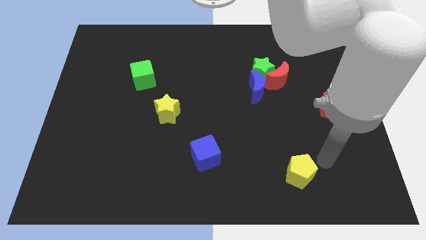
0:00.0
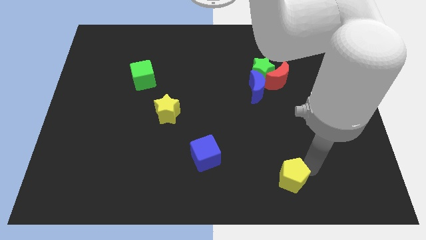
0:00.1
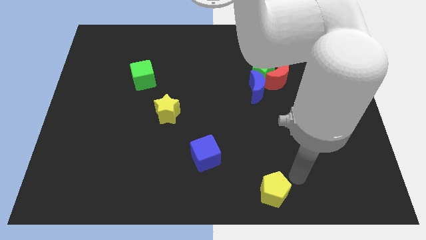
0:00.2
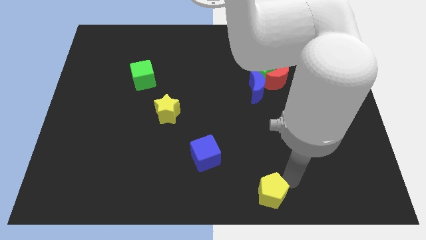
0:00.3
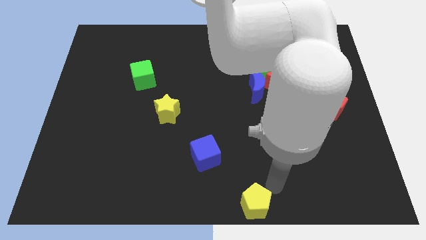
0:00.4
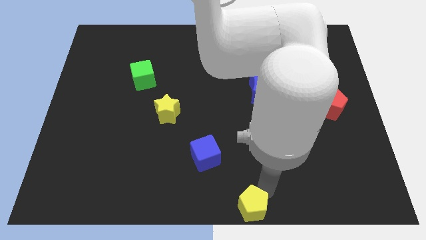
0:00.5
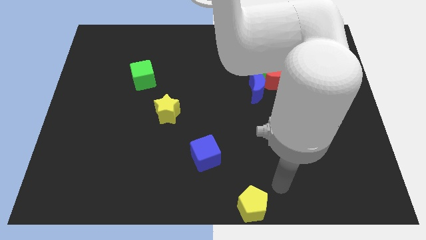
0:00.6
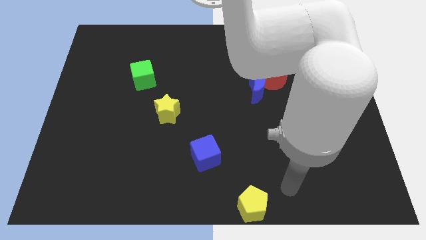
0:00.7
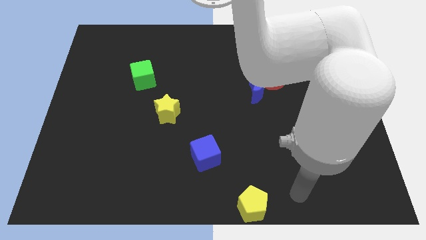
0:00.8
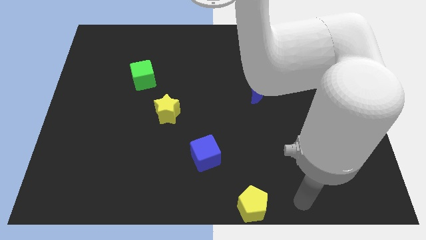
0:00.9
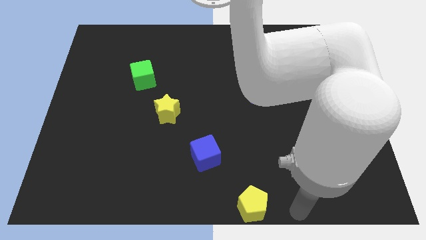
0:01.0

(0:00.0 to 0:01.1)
place the yellow pentagon towards the bottom right side of the blue cube

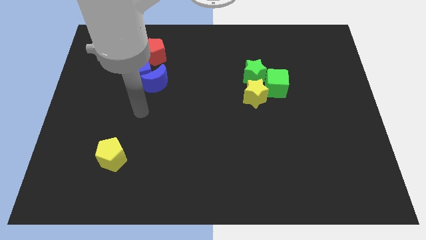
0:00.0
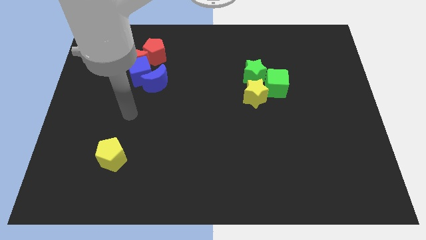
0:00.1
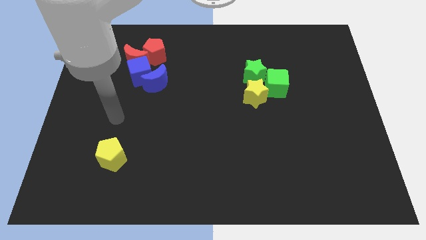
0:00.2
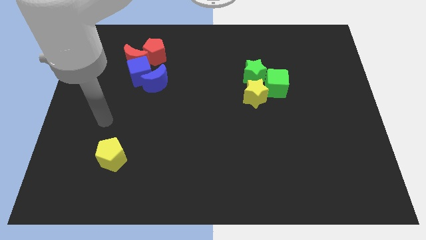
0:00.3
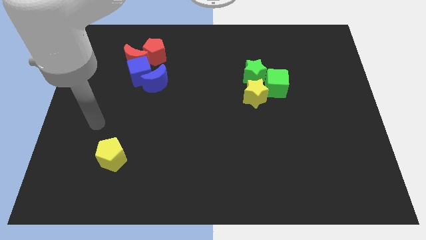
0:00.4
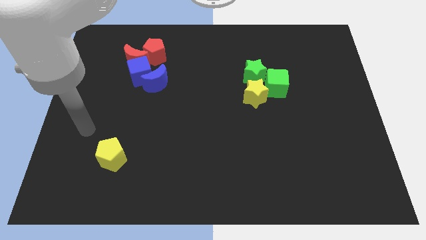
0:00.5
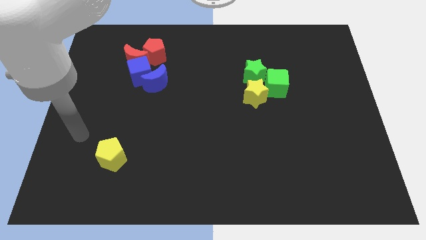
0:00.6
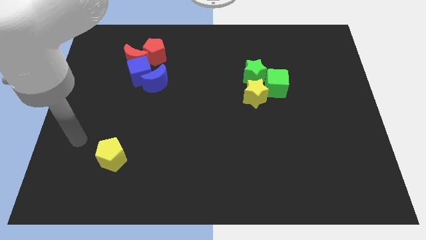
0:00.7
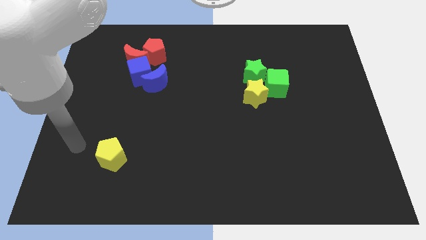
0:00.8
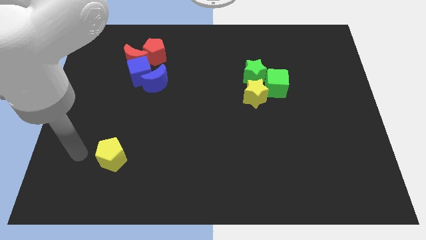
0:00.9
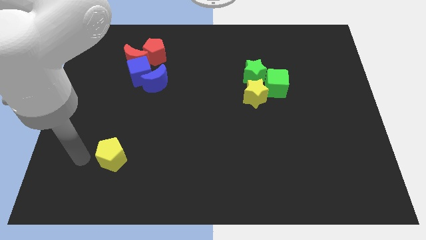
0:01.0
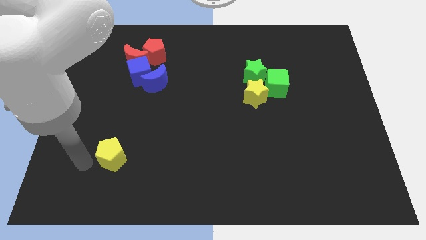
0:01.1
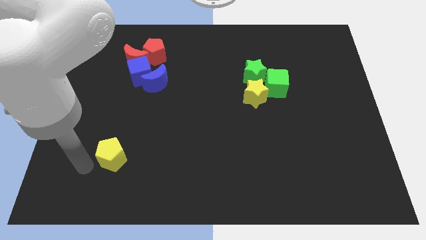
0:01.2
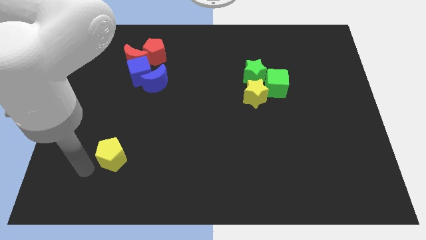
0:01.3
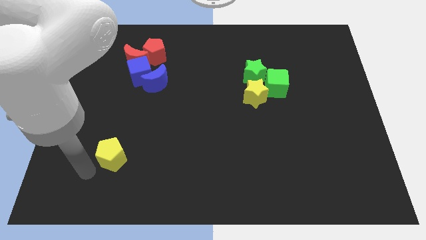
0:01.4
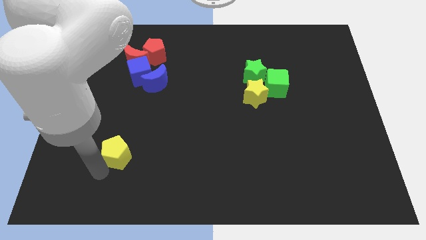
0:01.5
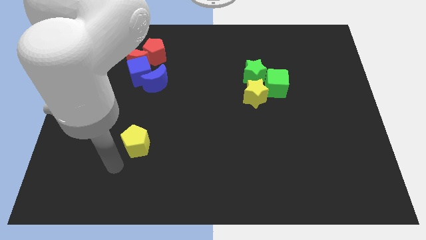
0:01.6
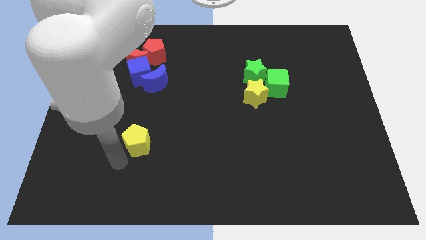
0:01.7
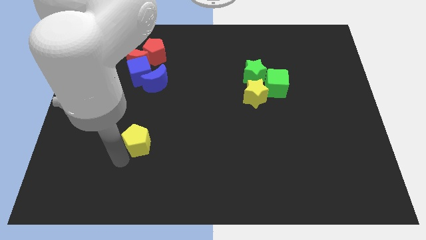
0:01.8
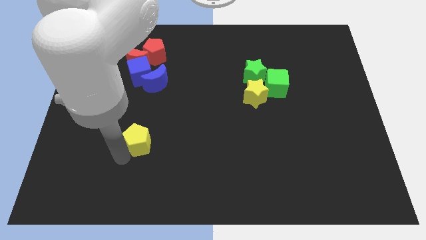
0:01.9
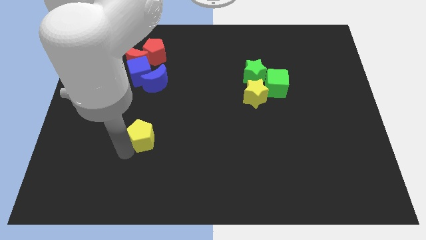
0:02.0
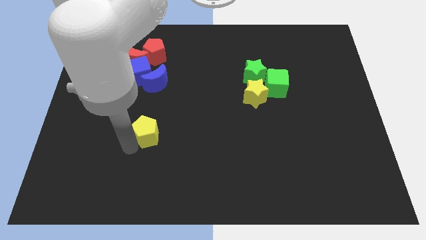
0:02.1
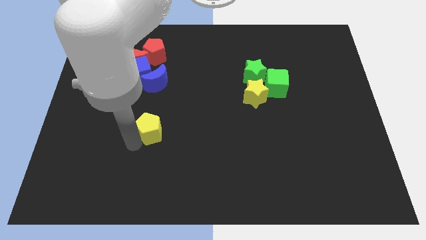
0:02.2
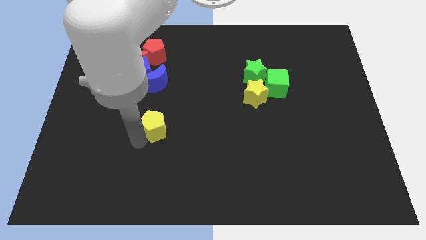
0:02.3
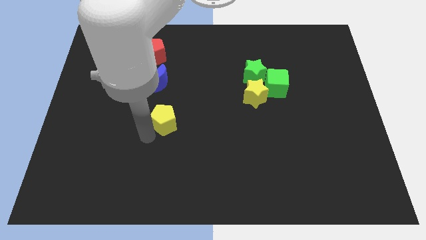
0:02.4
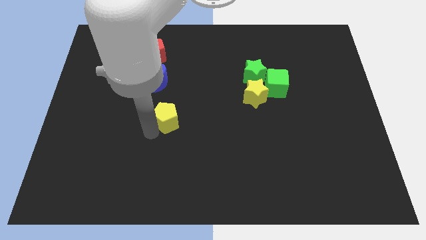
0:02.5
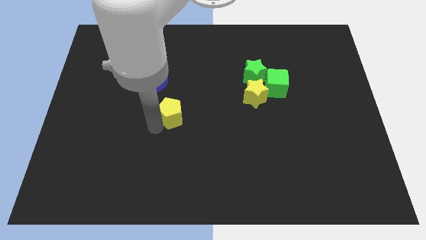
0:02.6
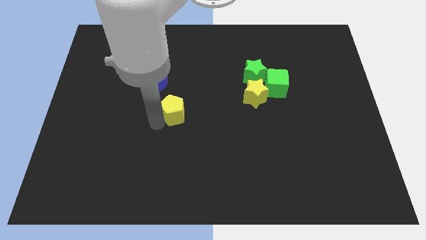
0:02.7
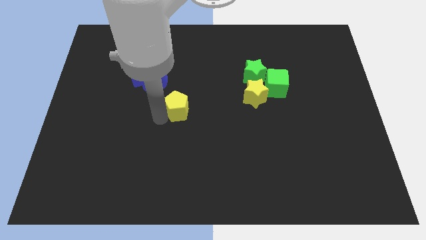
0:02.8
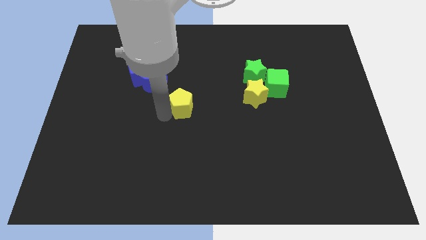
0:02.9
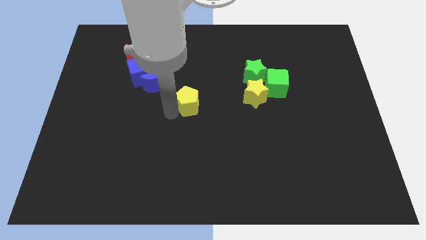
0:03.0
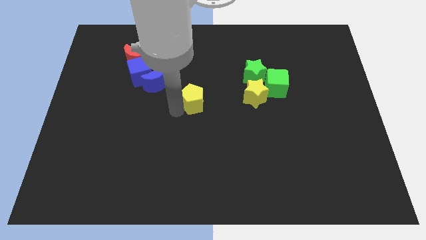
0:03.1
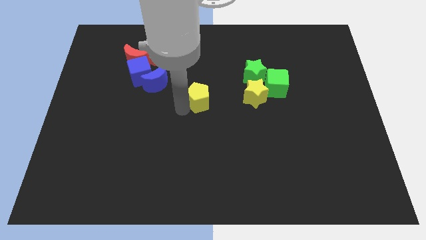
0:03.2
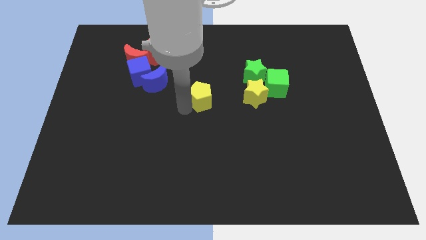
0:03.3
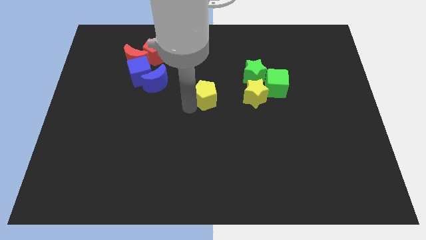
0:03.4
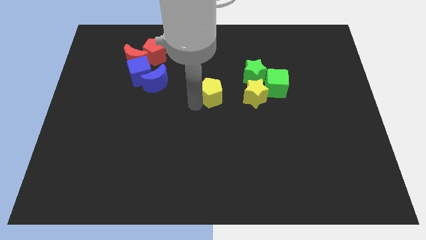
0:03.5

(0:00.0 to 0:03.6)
place the yellow pentagon left to the yellow star

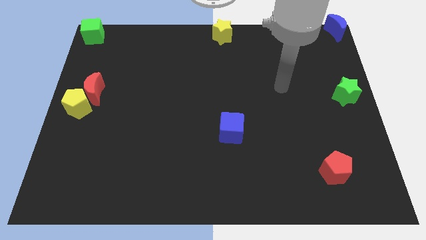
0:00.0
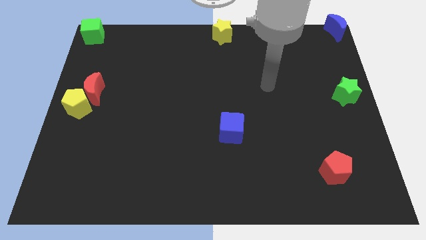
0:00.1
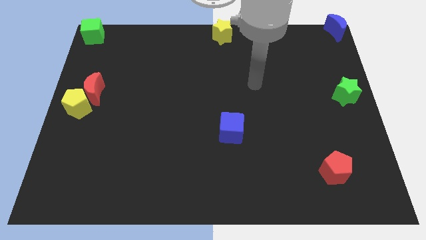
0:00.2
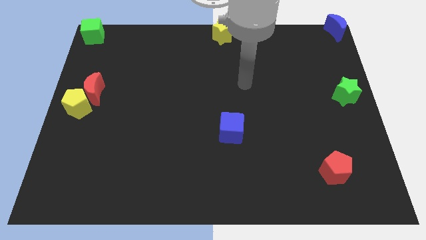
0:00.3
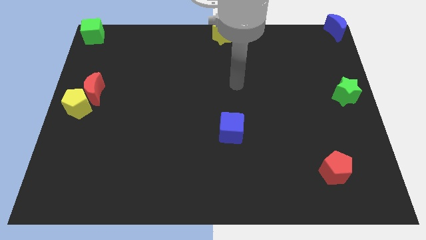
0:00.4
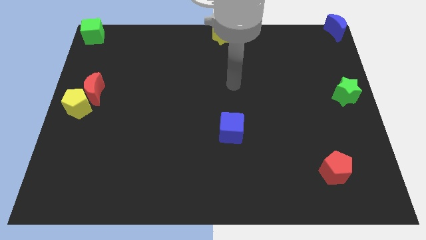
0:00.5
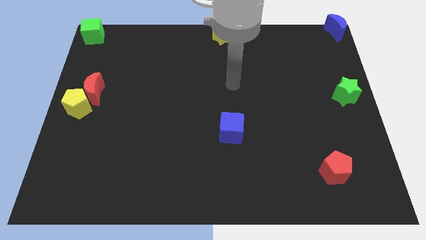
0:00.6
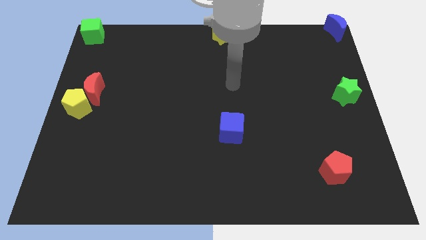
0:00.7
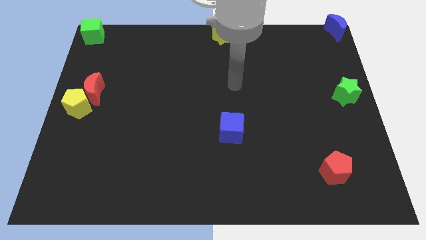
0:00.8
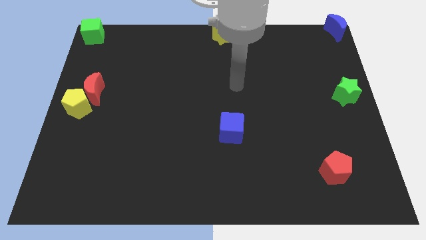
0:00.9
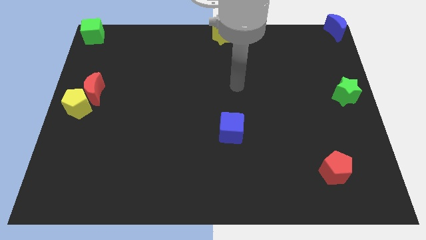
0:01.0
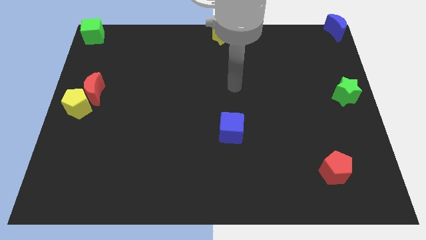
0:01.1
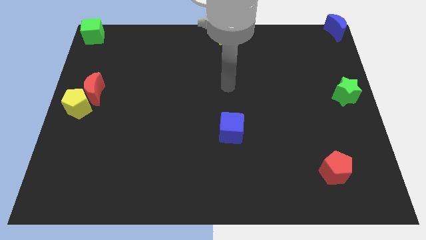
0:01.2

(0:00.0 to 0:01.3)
move your arm to the center of the board

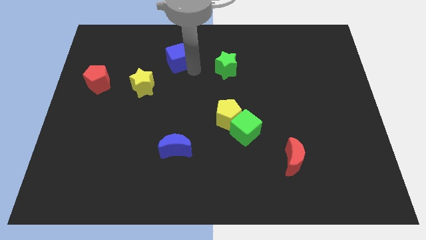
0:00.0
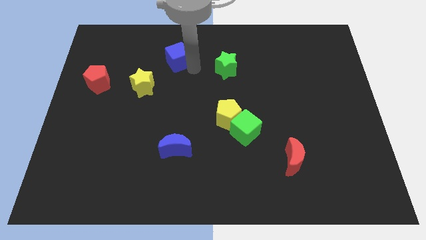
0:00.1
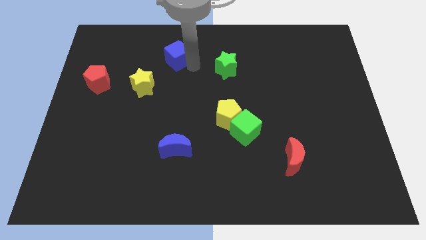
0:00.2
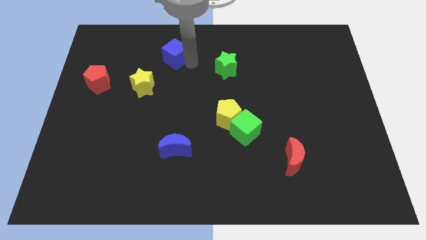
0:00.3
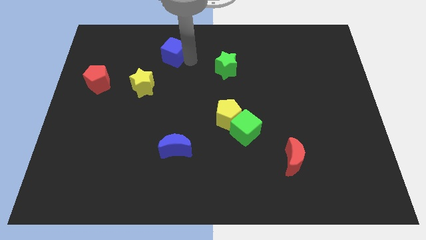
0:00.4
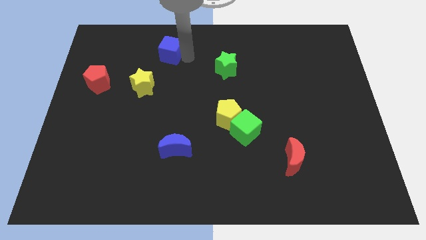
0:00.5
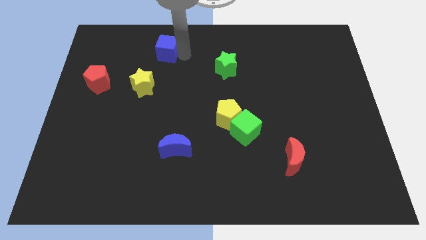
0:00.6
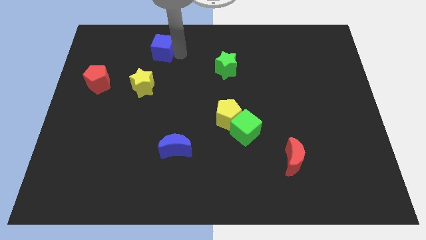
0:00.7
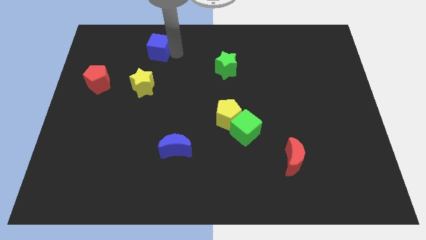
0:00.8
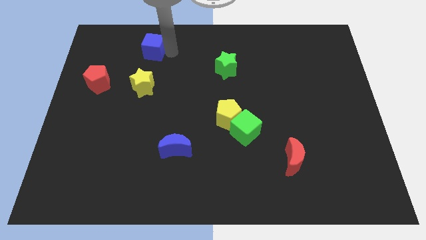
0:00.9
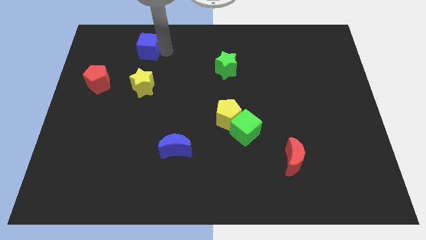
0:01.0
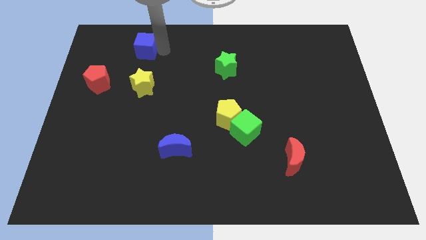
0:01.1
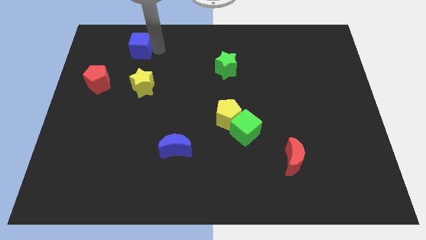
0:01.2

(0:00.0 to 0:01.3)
move the blue cube to the top side of the yellow star

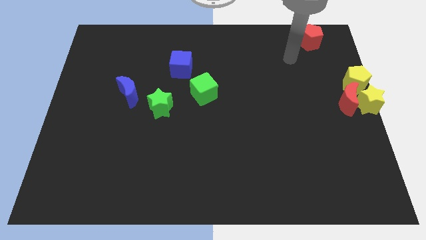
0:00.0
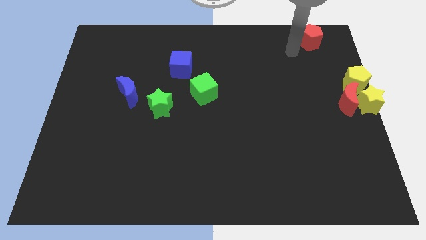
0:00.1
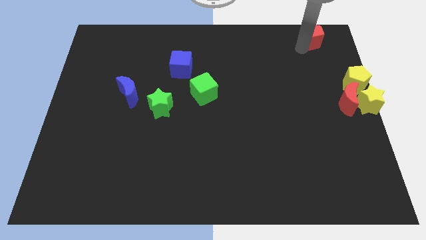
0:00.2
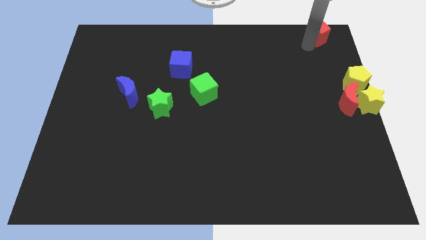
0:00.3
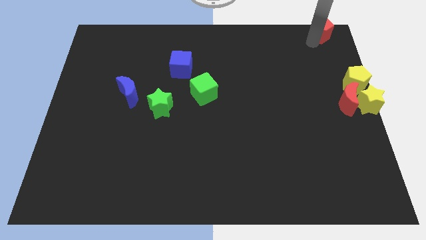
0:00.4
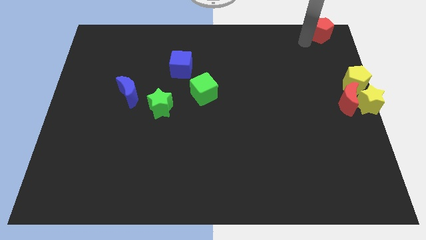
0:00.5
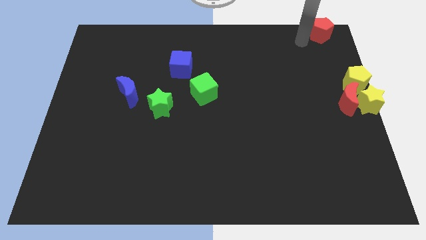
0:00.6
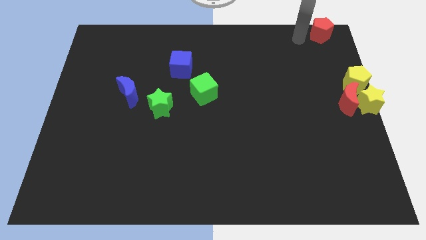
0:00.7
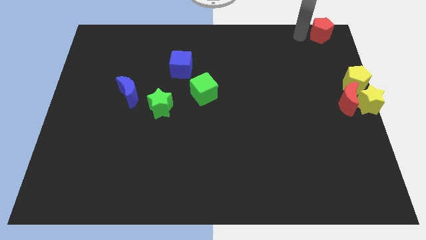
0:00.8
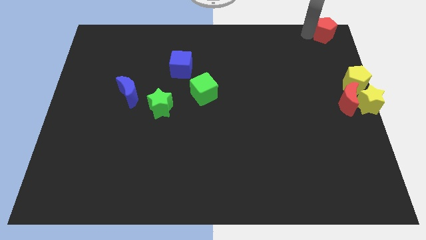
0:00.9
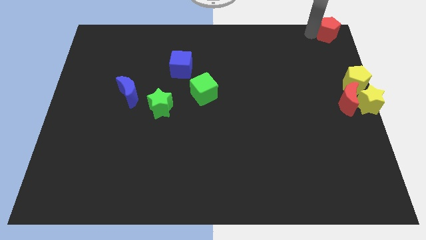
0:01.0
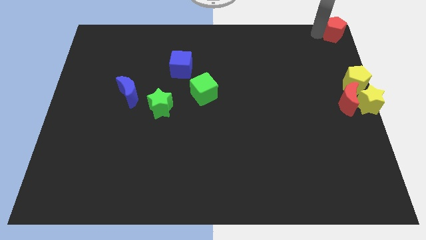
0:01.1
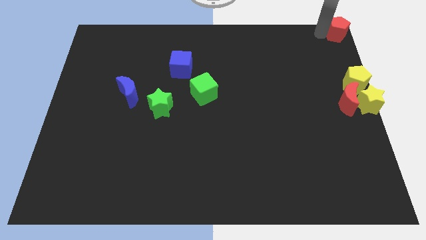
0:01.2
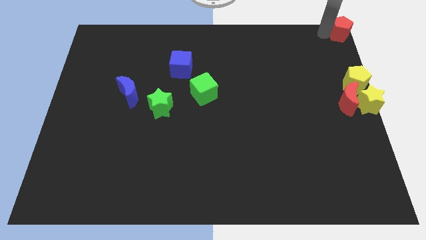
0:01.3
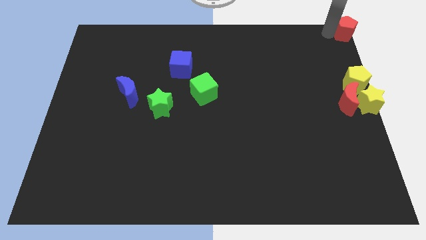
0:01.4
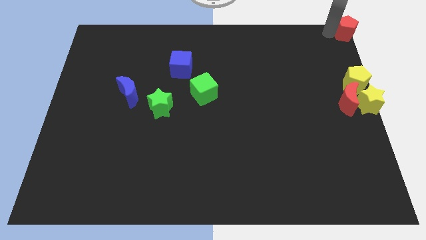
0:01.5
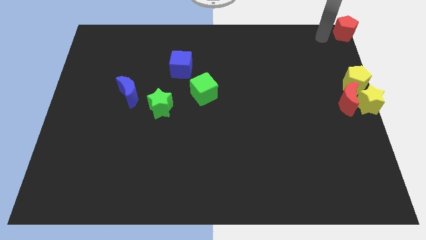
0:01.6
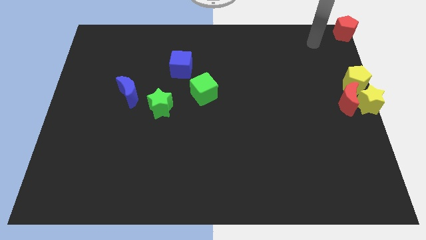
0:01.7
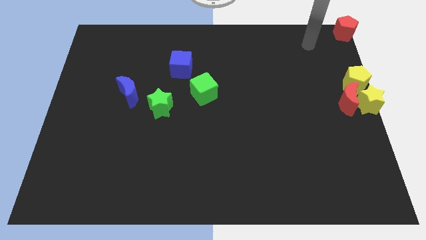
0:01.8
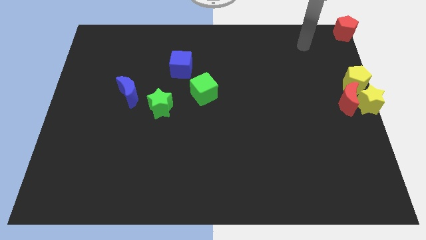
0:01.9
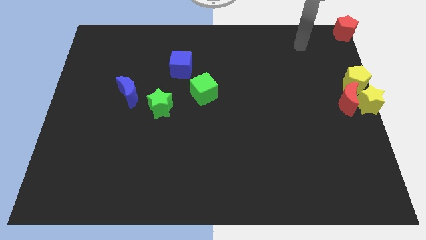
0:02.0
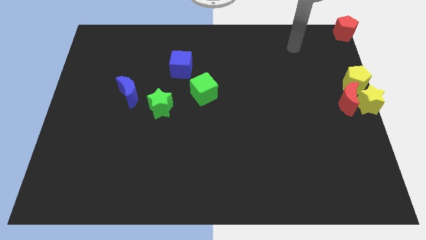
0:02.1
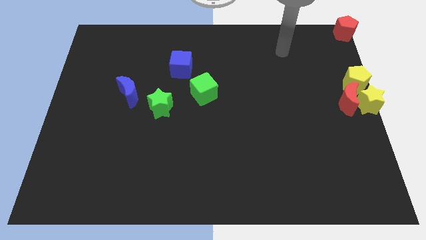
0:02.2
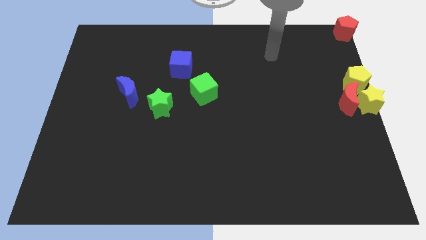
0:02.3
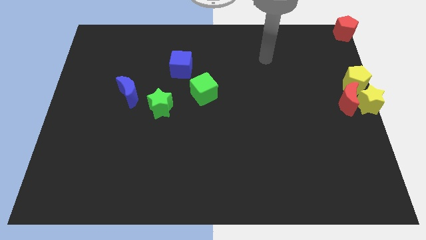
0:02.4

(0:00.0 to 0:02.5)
push the red pentagon to the top right of the board
